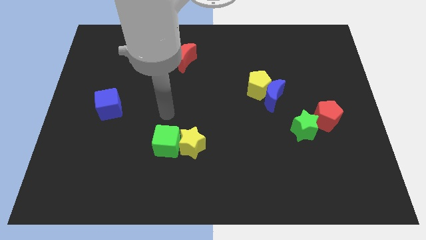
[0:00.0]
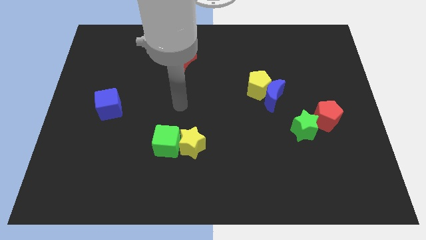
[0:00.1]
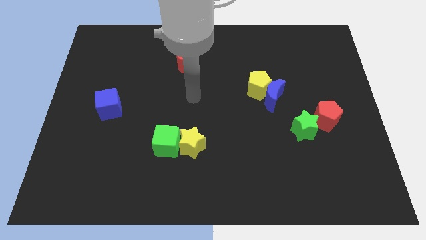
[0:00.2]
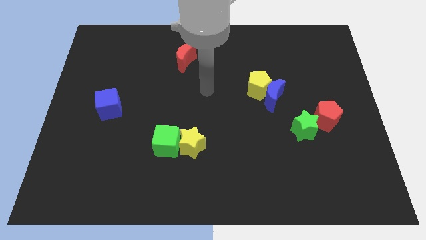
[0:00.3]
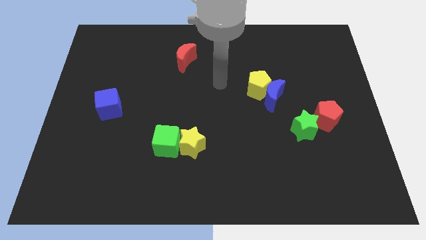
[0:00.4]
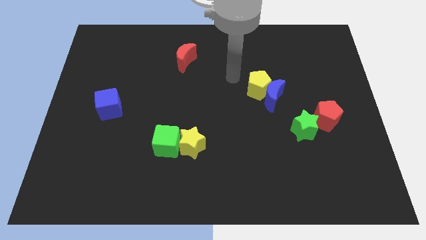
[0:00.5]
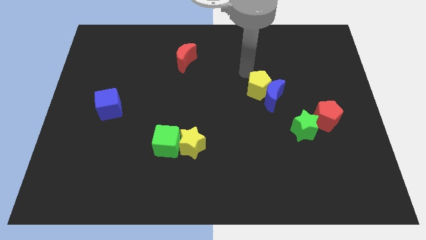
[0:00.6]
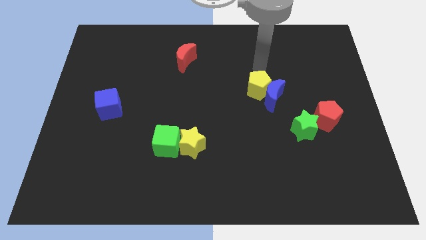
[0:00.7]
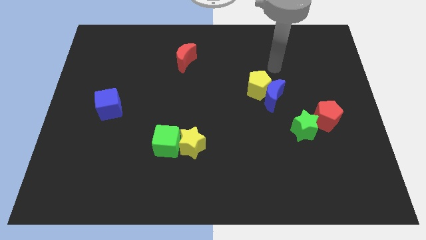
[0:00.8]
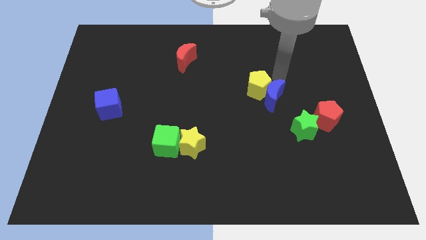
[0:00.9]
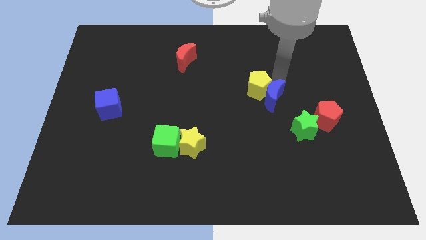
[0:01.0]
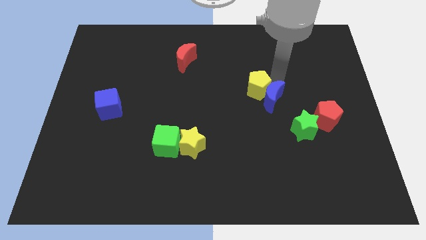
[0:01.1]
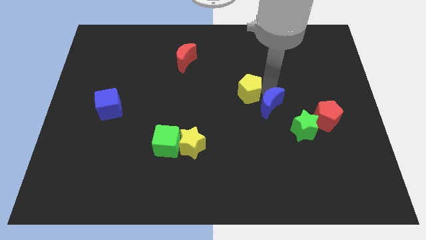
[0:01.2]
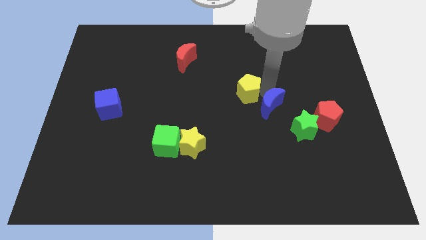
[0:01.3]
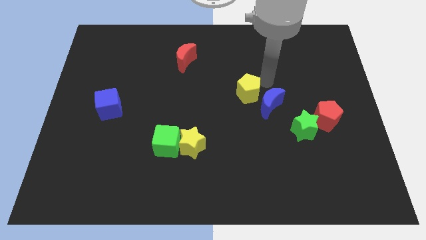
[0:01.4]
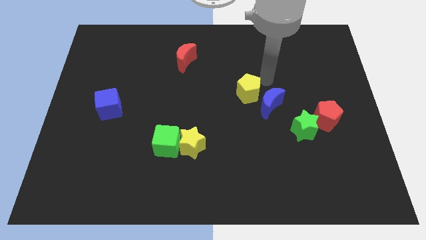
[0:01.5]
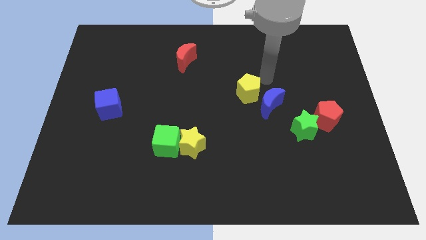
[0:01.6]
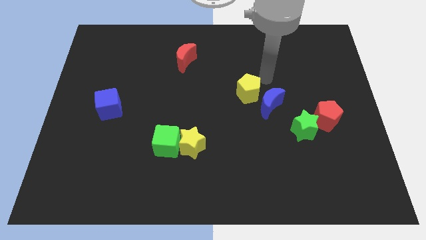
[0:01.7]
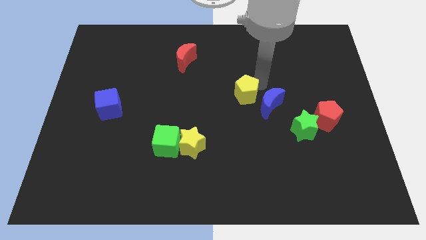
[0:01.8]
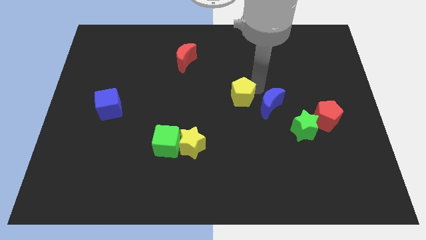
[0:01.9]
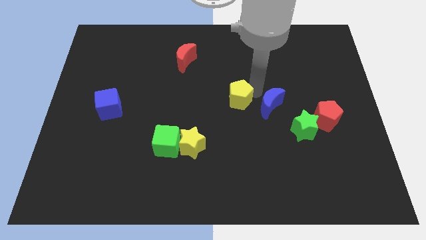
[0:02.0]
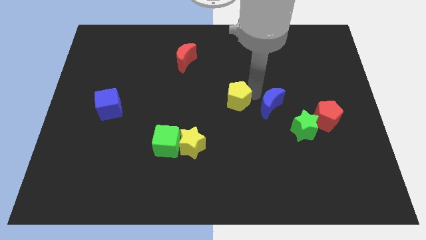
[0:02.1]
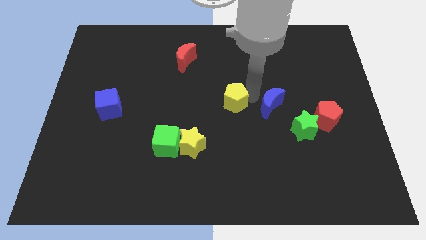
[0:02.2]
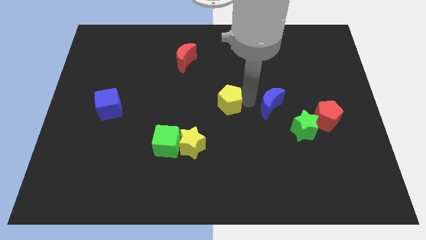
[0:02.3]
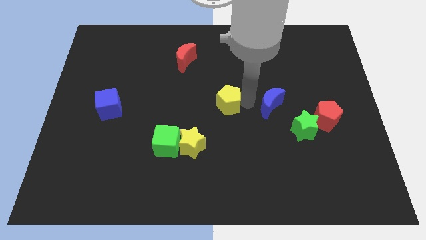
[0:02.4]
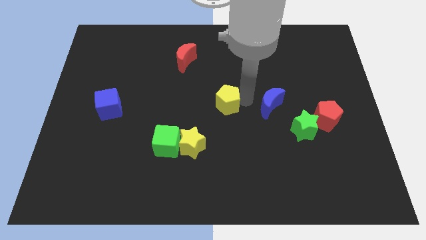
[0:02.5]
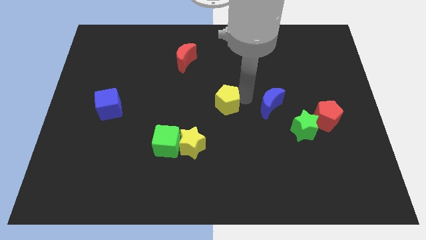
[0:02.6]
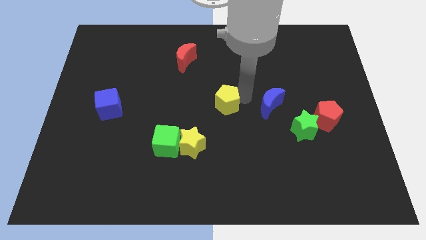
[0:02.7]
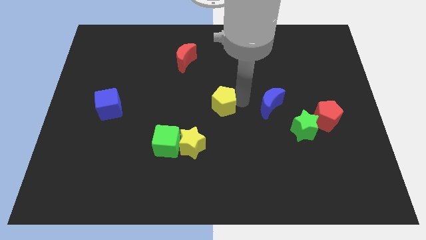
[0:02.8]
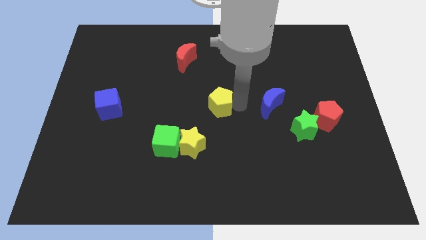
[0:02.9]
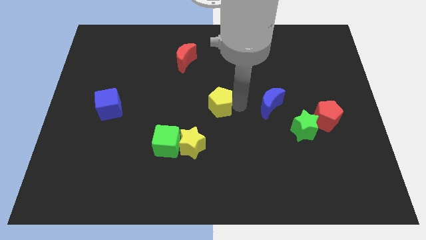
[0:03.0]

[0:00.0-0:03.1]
separate yellow pentagon from blue moon

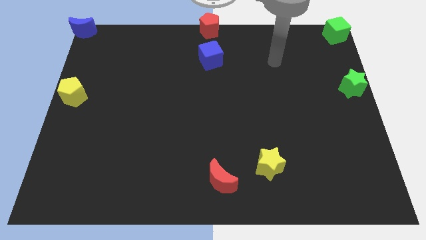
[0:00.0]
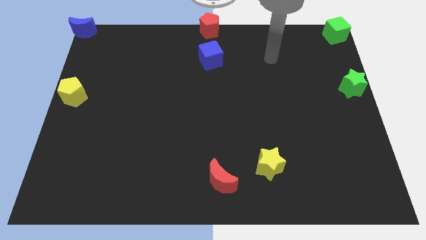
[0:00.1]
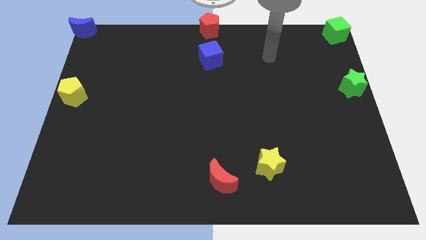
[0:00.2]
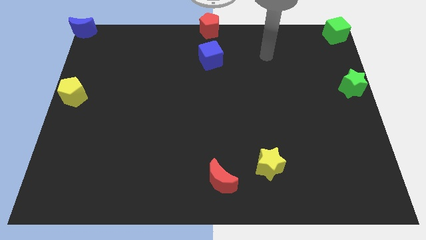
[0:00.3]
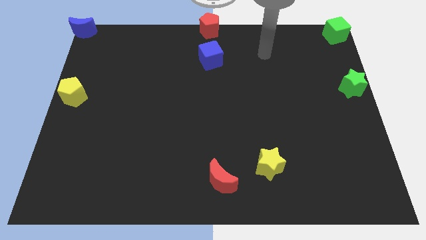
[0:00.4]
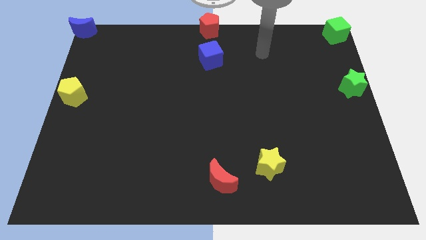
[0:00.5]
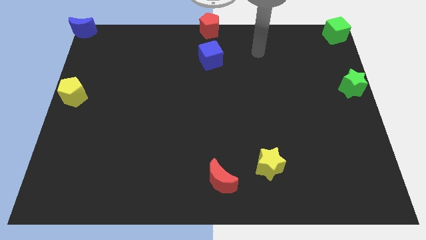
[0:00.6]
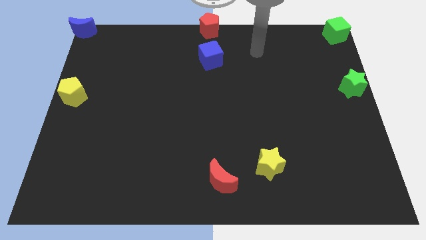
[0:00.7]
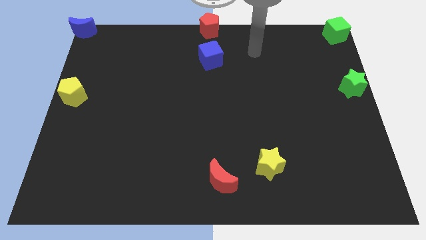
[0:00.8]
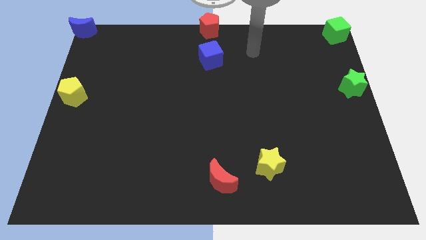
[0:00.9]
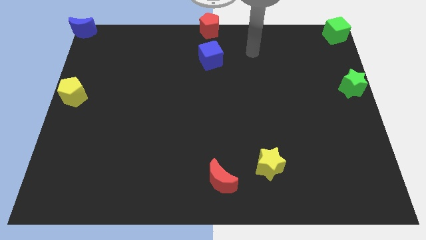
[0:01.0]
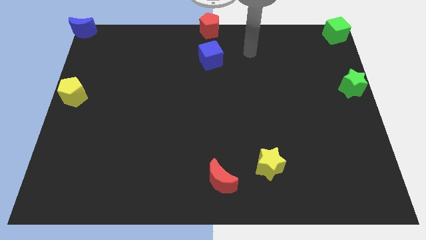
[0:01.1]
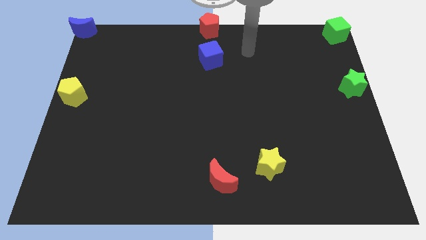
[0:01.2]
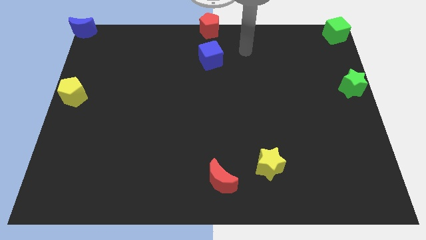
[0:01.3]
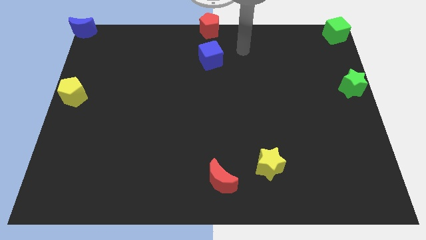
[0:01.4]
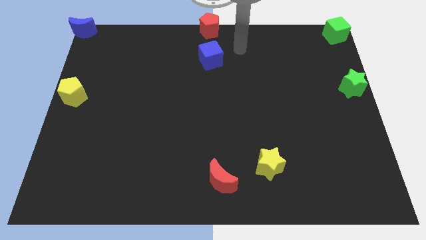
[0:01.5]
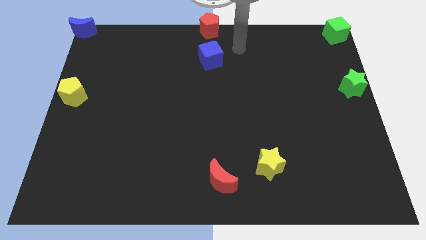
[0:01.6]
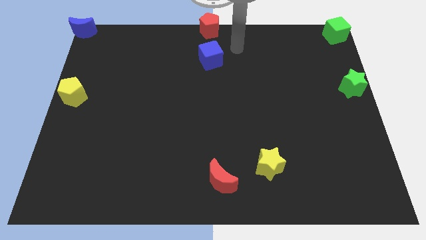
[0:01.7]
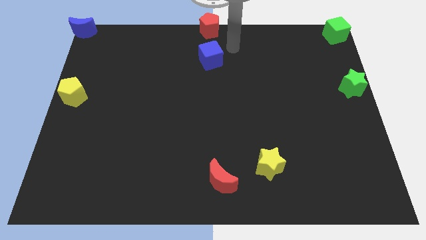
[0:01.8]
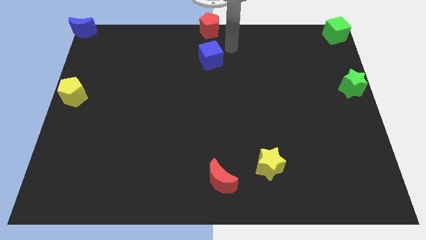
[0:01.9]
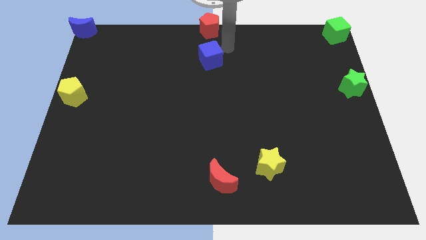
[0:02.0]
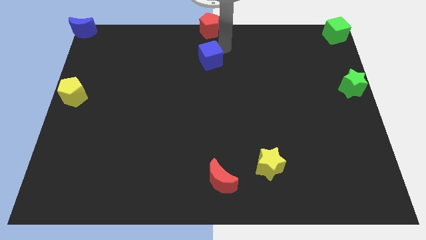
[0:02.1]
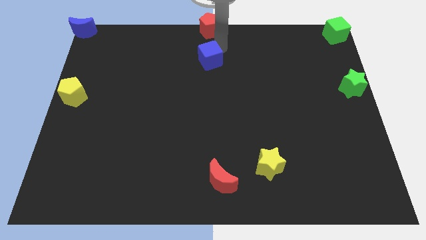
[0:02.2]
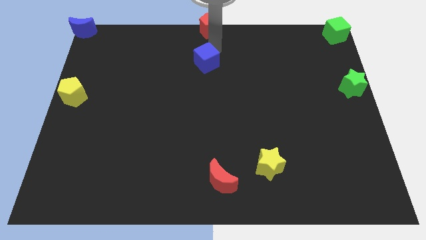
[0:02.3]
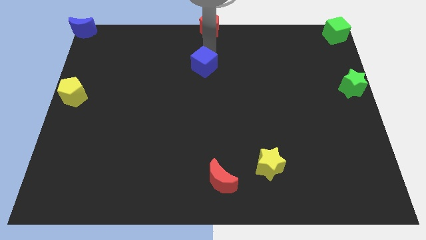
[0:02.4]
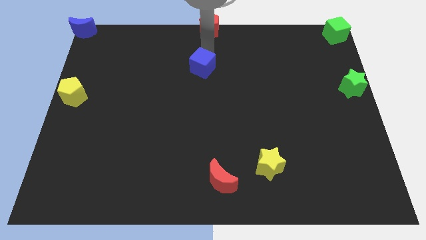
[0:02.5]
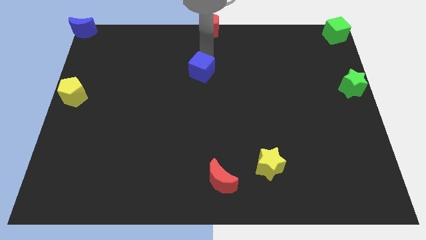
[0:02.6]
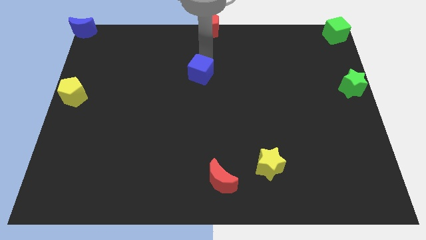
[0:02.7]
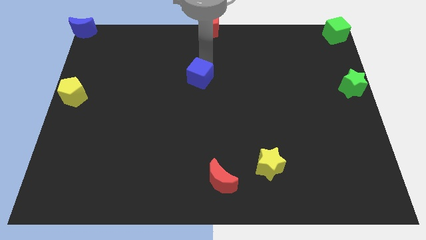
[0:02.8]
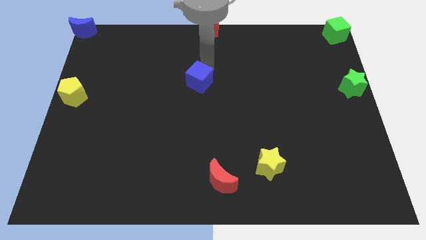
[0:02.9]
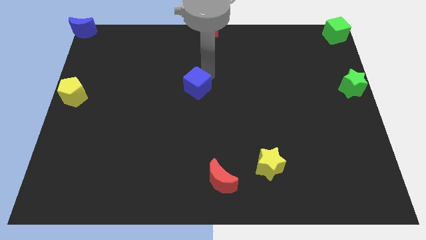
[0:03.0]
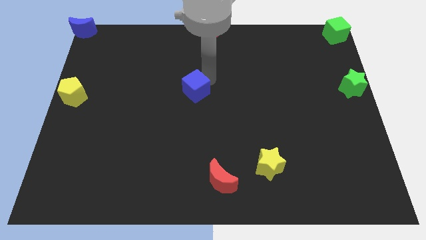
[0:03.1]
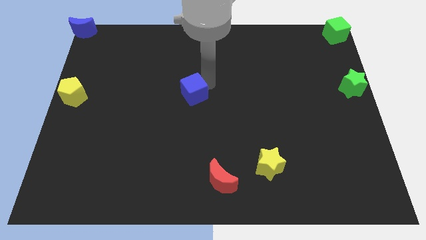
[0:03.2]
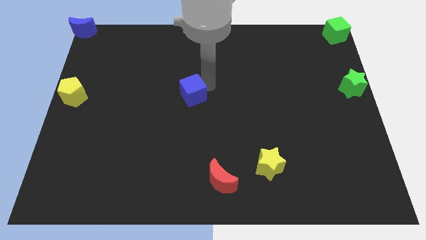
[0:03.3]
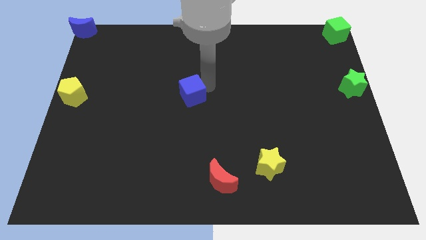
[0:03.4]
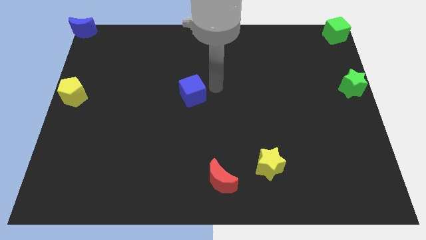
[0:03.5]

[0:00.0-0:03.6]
move the blue cube to the center of the board

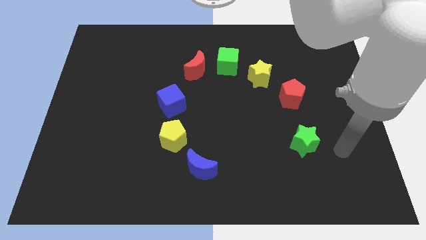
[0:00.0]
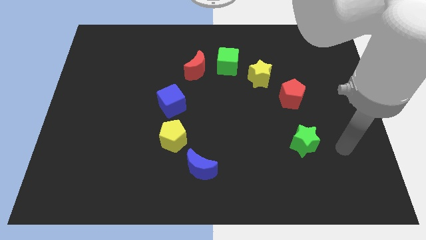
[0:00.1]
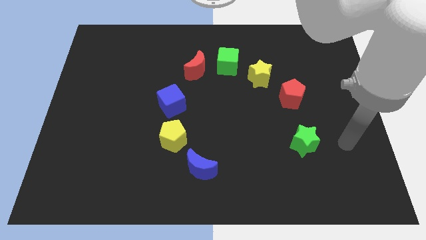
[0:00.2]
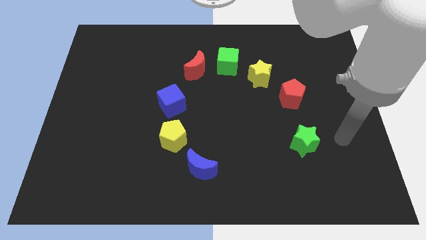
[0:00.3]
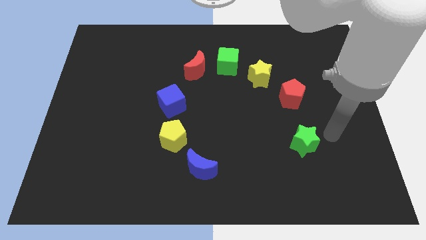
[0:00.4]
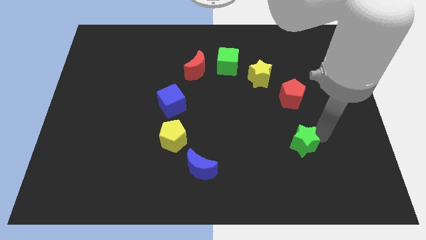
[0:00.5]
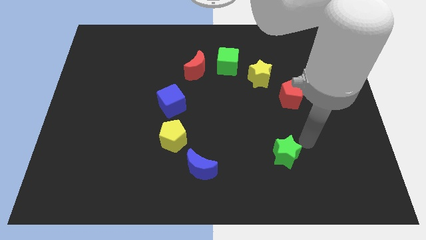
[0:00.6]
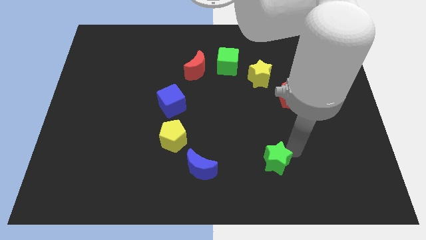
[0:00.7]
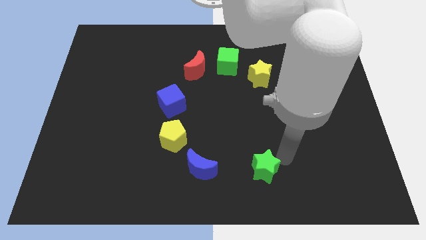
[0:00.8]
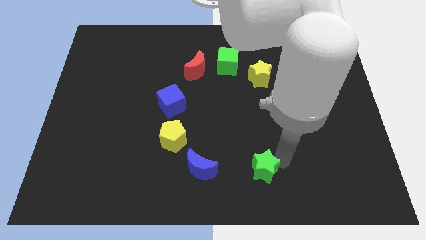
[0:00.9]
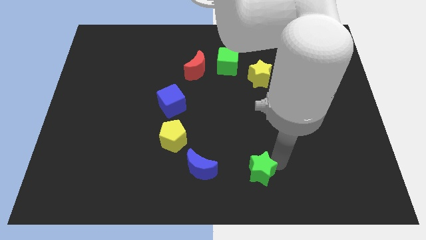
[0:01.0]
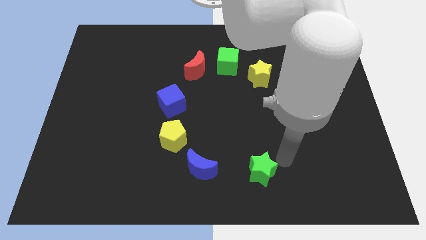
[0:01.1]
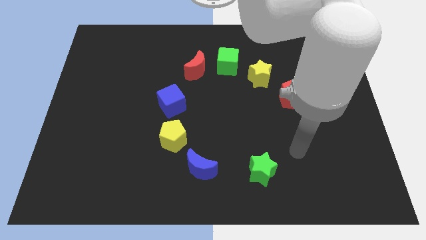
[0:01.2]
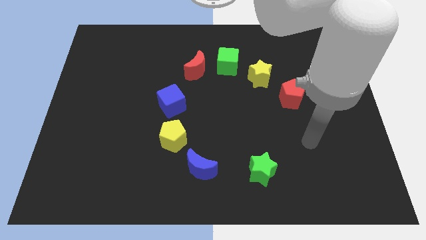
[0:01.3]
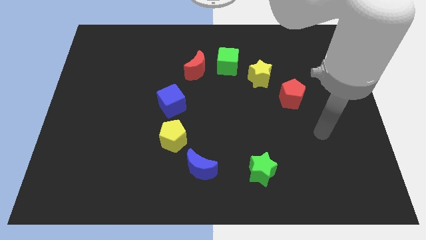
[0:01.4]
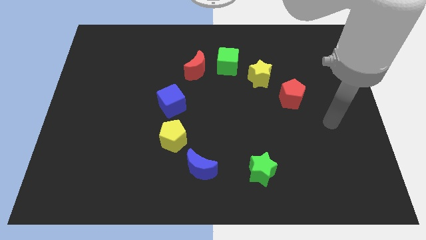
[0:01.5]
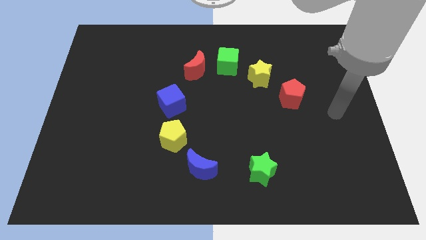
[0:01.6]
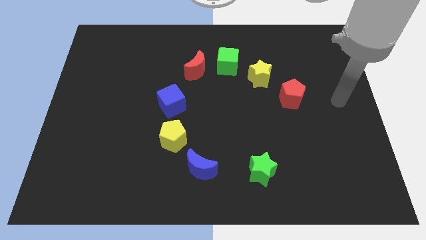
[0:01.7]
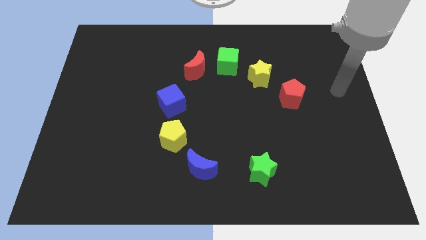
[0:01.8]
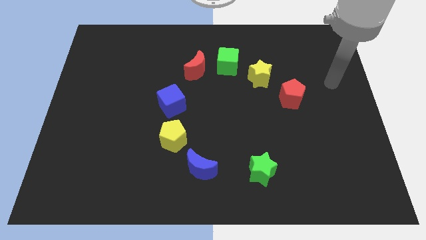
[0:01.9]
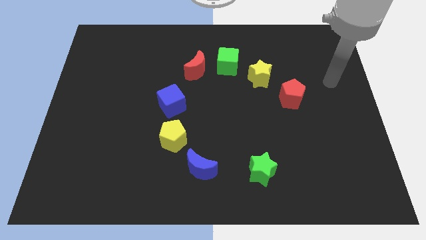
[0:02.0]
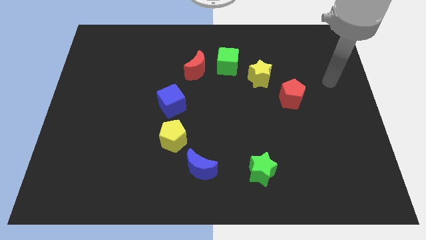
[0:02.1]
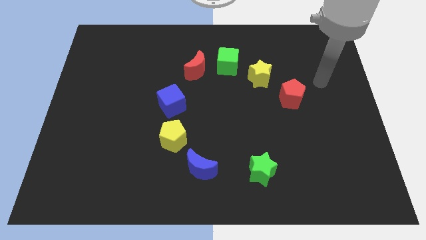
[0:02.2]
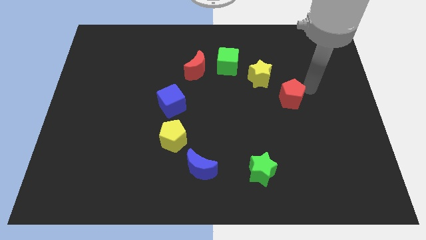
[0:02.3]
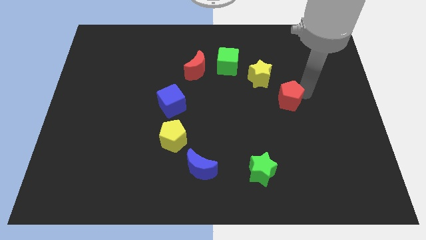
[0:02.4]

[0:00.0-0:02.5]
place your arm towards right side of red pentagon
